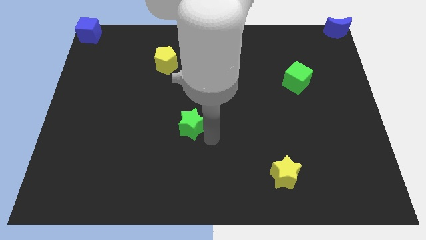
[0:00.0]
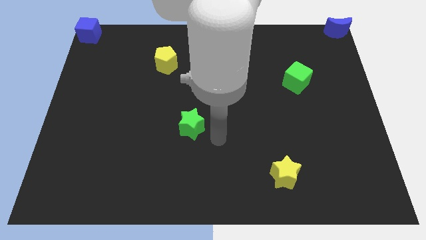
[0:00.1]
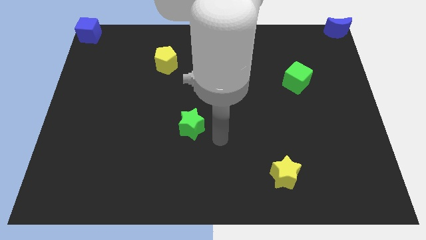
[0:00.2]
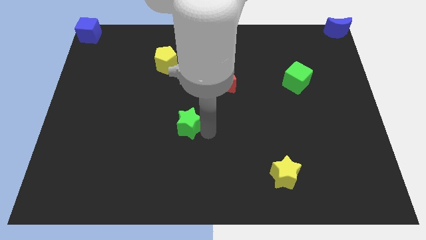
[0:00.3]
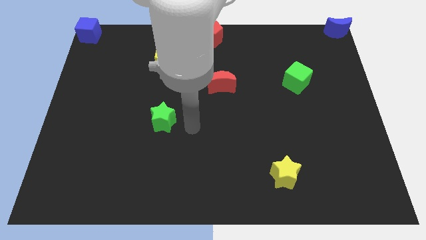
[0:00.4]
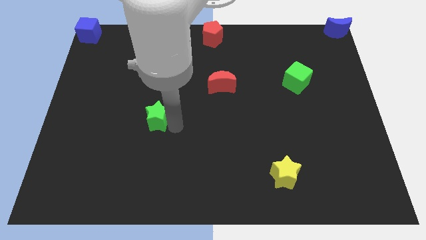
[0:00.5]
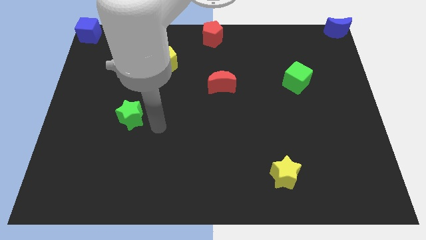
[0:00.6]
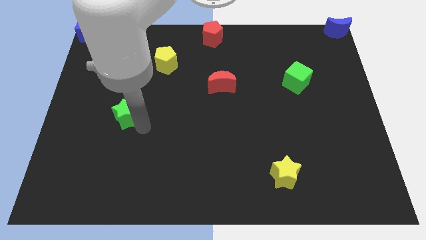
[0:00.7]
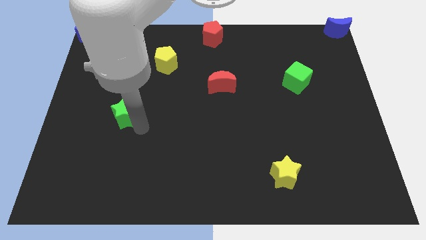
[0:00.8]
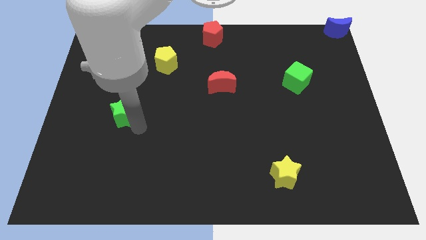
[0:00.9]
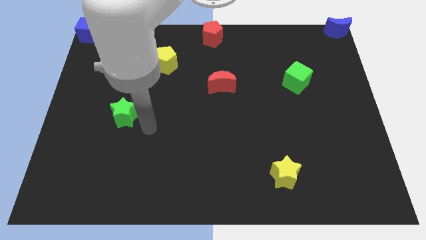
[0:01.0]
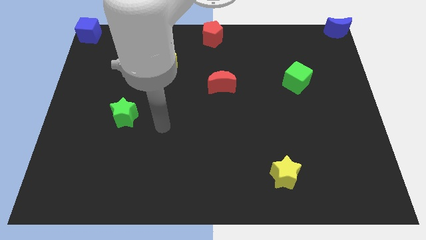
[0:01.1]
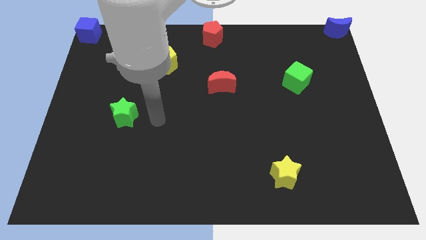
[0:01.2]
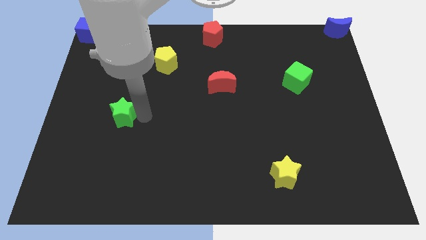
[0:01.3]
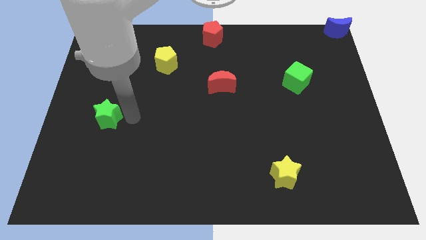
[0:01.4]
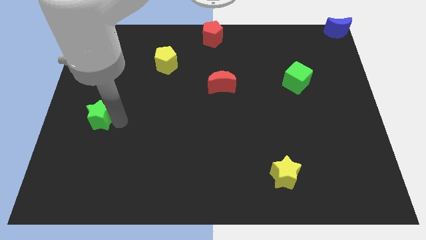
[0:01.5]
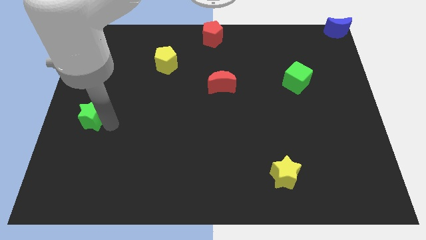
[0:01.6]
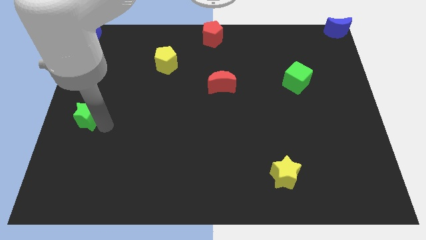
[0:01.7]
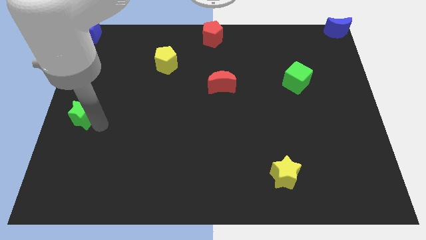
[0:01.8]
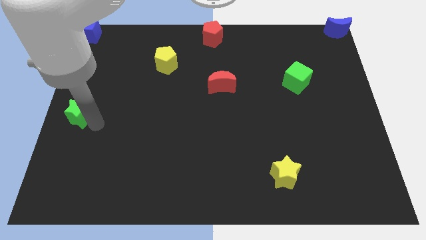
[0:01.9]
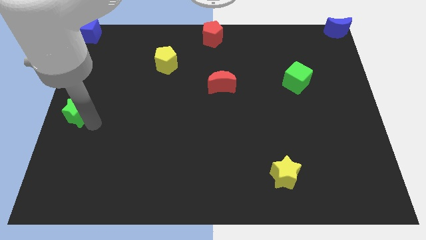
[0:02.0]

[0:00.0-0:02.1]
push the green star towards the center left of the board

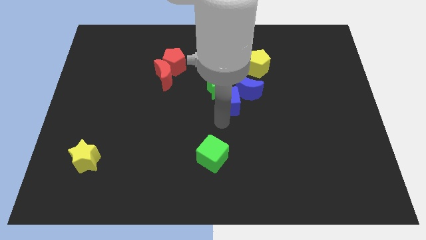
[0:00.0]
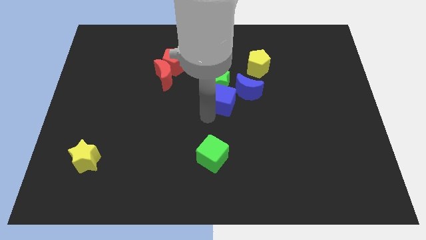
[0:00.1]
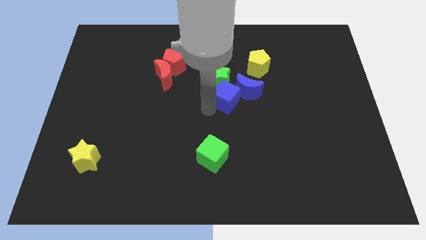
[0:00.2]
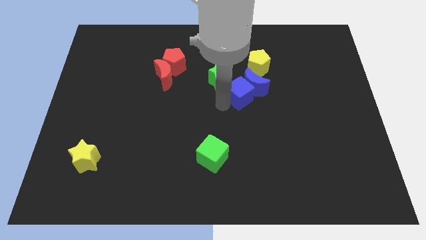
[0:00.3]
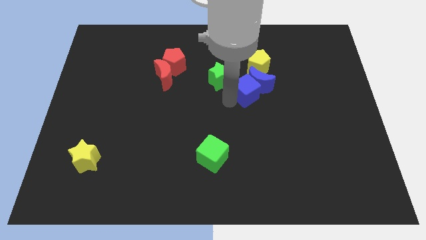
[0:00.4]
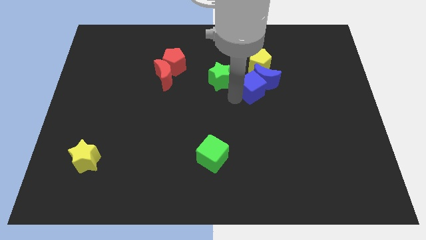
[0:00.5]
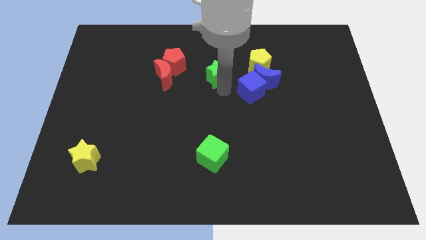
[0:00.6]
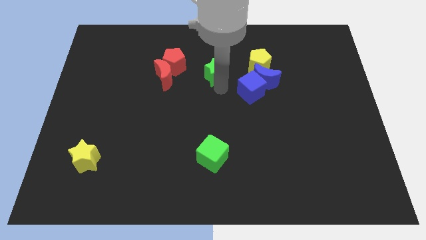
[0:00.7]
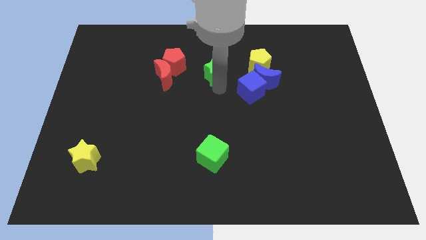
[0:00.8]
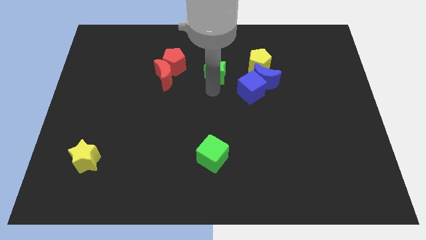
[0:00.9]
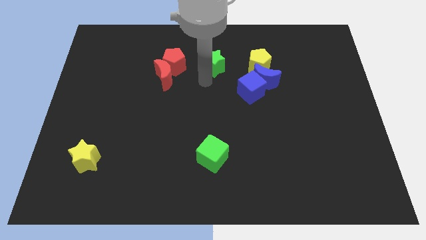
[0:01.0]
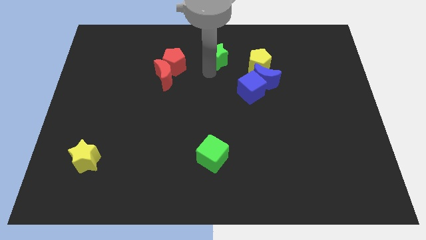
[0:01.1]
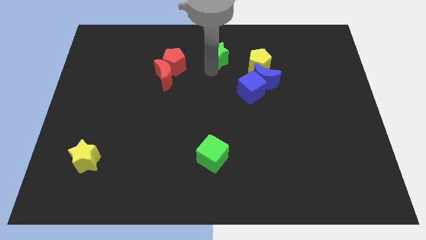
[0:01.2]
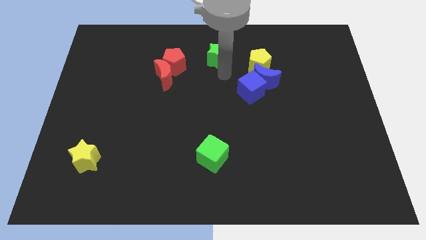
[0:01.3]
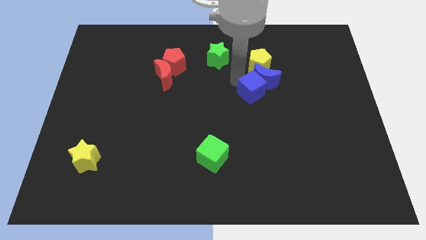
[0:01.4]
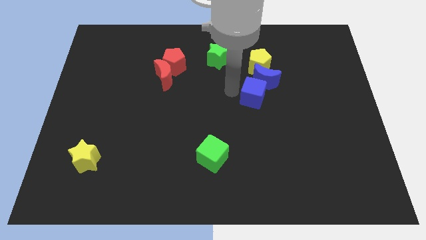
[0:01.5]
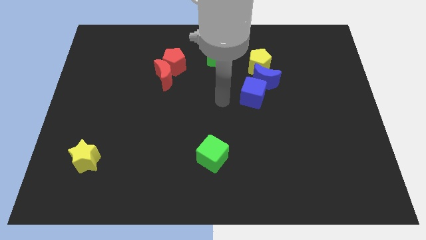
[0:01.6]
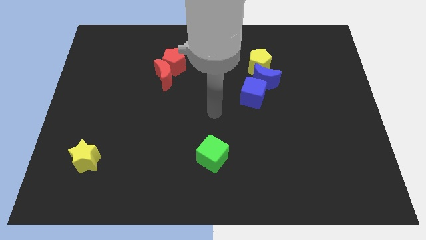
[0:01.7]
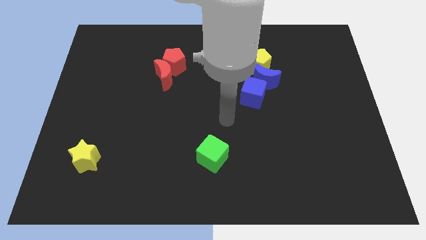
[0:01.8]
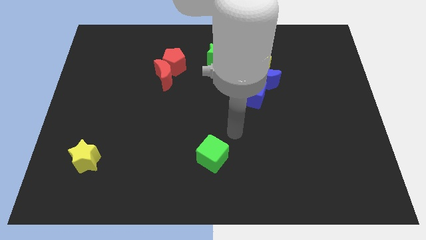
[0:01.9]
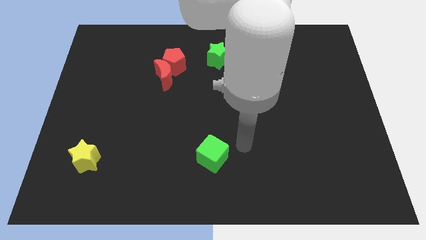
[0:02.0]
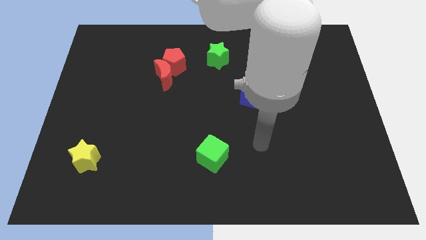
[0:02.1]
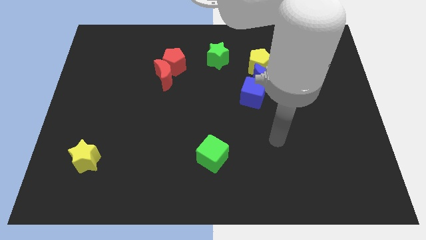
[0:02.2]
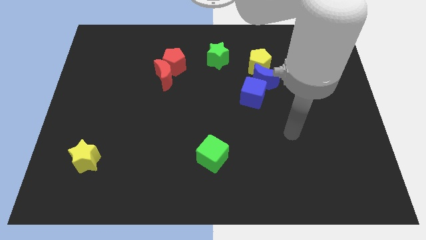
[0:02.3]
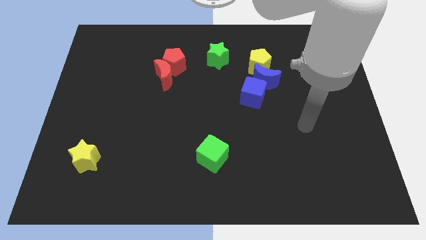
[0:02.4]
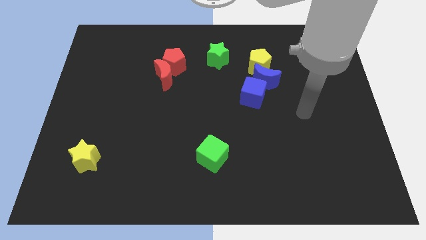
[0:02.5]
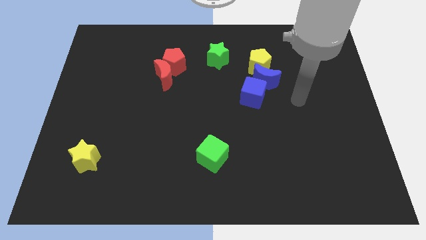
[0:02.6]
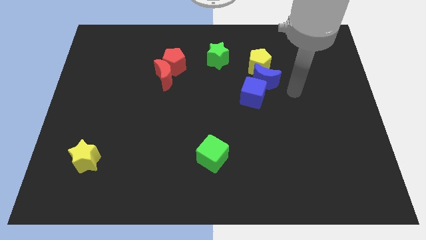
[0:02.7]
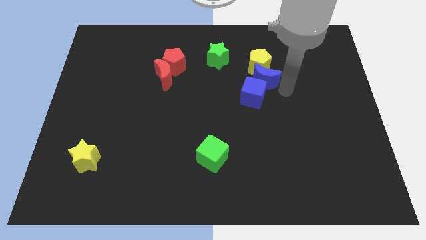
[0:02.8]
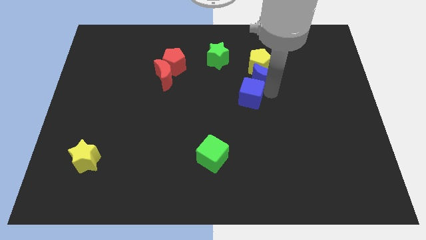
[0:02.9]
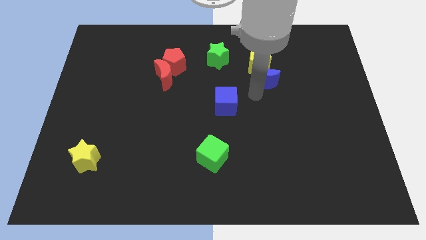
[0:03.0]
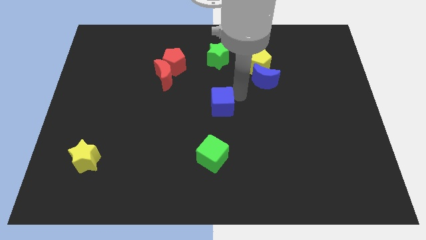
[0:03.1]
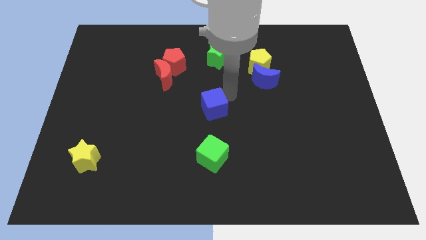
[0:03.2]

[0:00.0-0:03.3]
separate the blue blocks

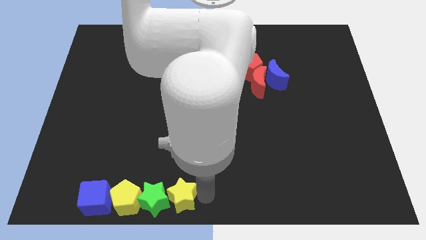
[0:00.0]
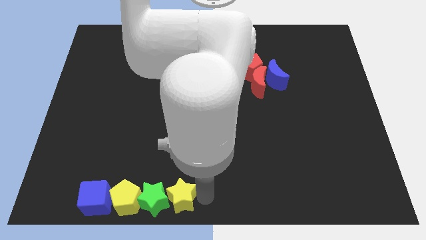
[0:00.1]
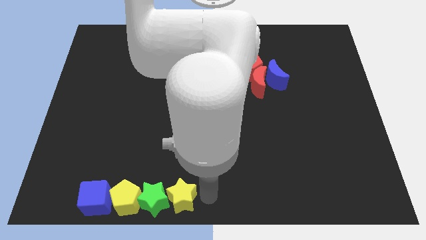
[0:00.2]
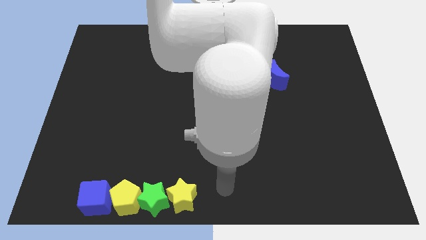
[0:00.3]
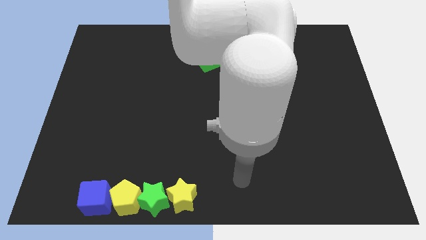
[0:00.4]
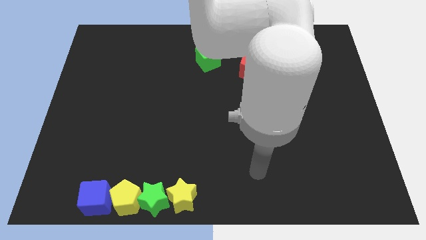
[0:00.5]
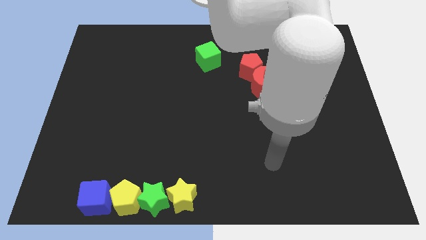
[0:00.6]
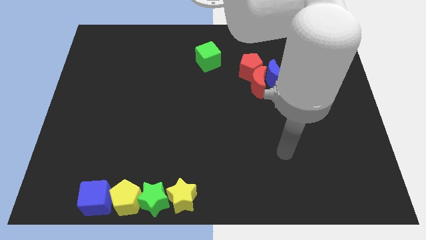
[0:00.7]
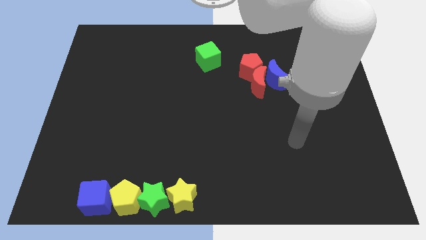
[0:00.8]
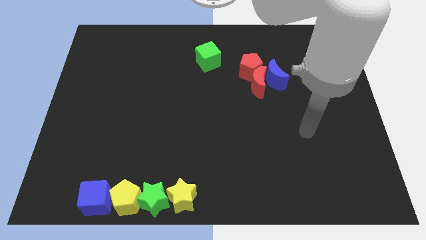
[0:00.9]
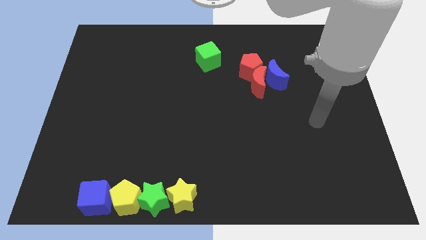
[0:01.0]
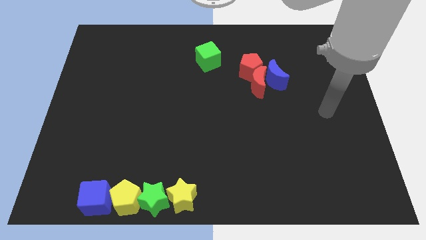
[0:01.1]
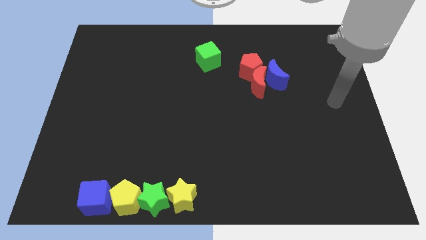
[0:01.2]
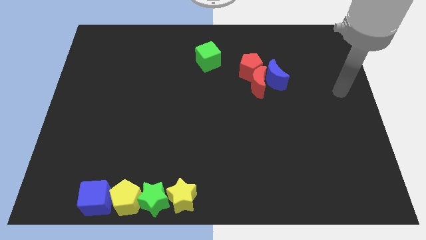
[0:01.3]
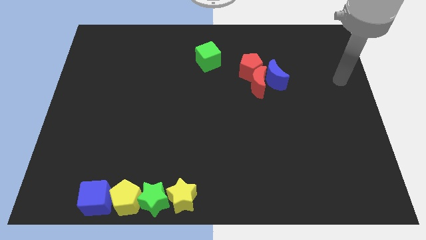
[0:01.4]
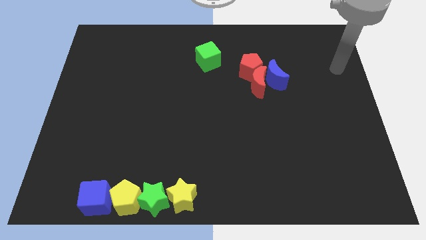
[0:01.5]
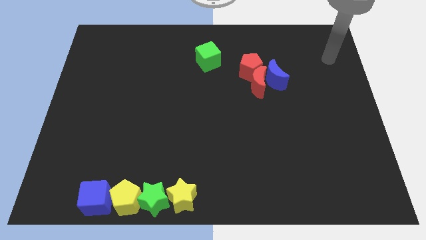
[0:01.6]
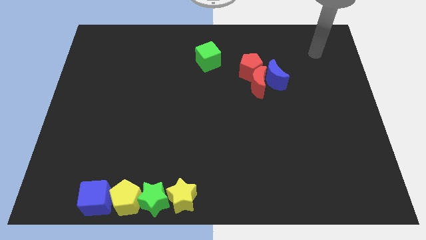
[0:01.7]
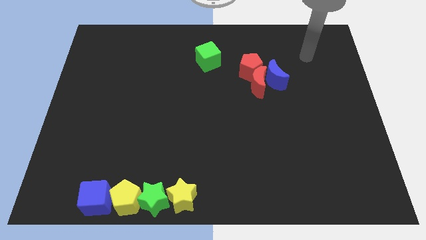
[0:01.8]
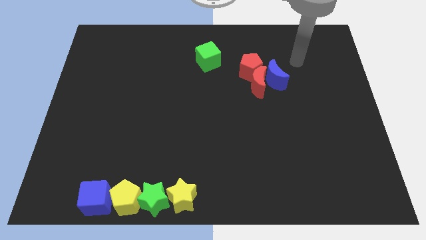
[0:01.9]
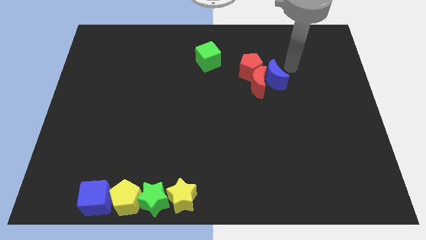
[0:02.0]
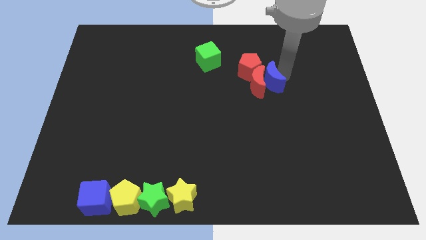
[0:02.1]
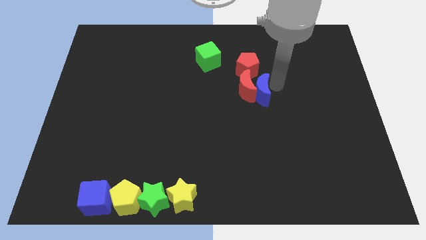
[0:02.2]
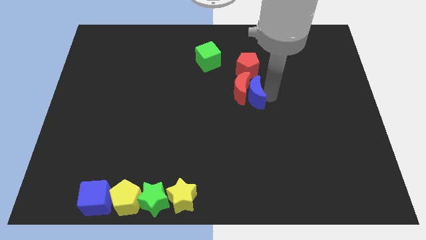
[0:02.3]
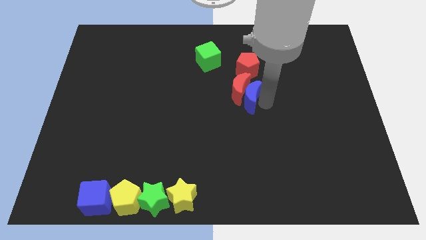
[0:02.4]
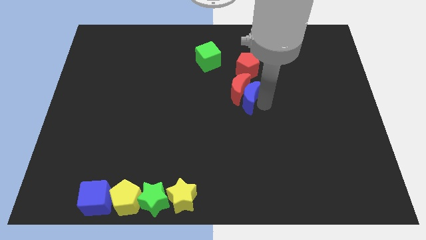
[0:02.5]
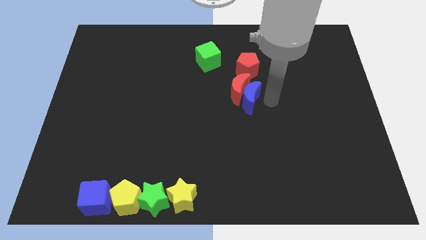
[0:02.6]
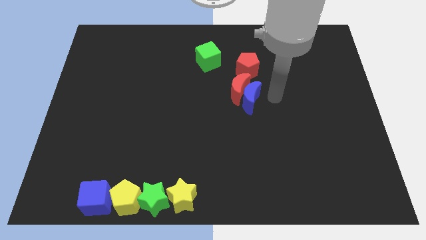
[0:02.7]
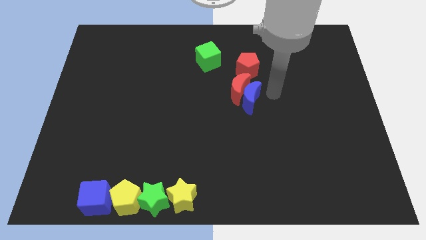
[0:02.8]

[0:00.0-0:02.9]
push blue moon into the red moon

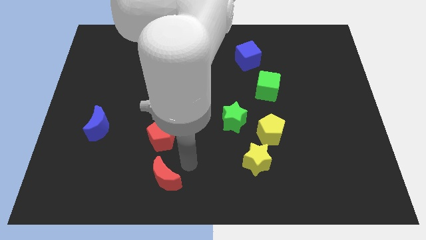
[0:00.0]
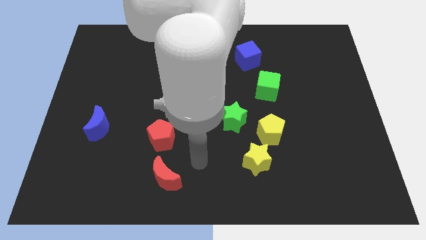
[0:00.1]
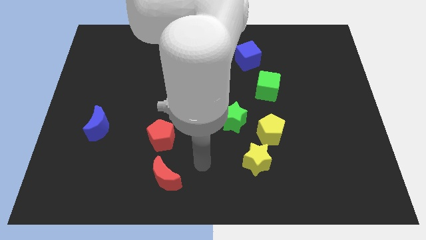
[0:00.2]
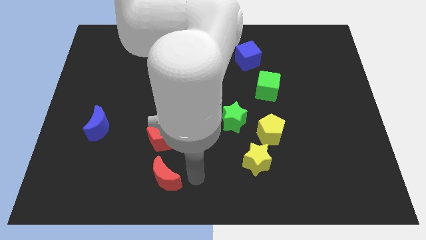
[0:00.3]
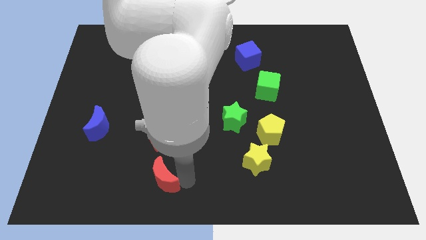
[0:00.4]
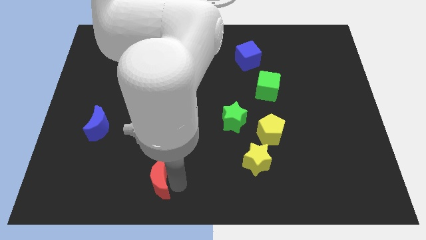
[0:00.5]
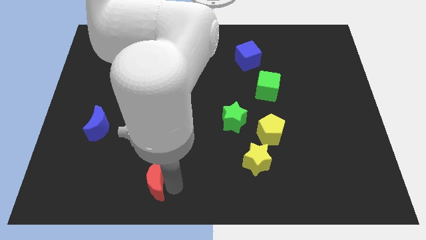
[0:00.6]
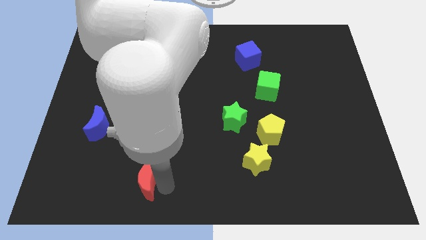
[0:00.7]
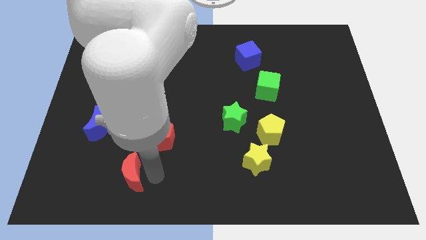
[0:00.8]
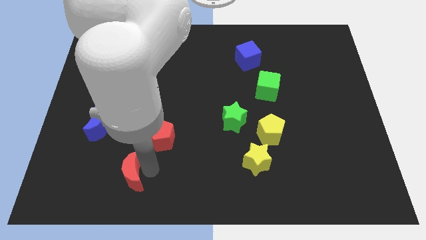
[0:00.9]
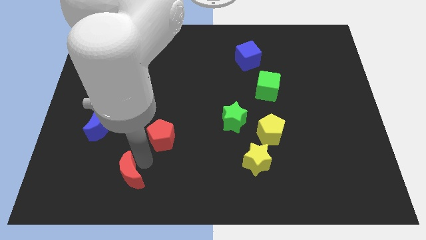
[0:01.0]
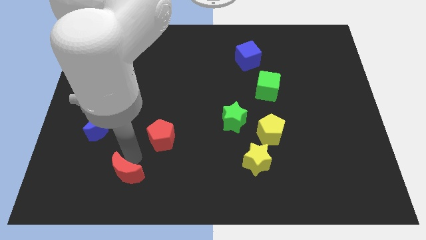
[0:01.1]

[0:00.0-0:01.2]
slightly move the red crescent to form a triangle with red pentagon and blue moon
